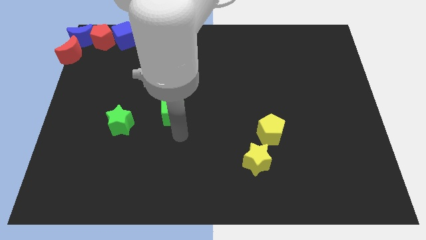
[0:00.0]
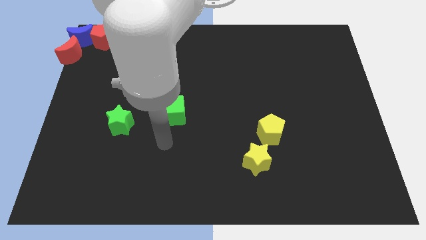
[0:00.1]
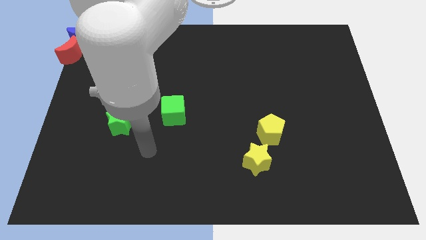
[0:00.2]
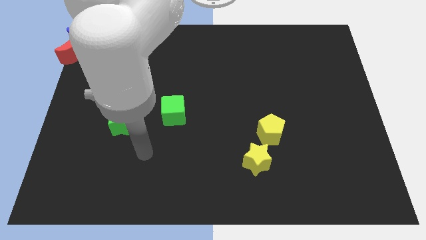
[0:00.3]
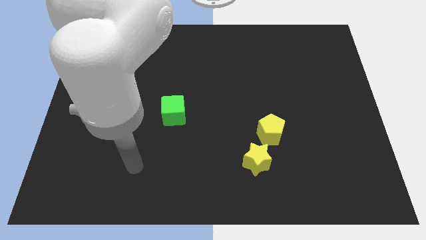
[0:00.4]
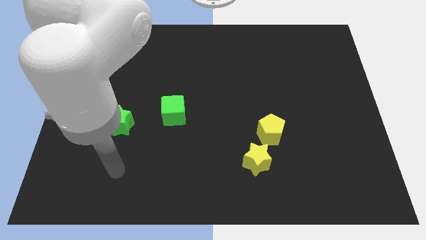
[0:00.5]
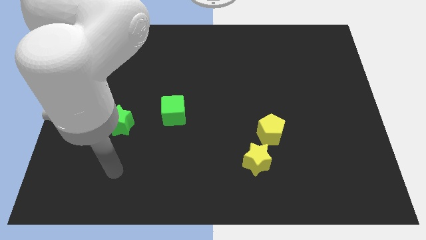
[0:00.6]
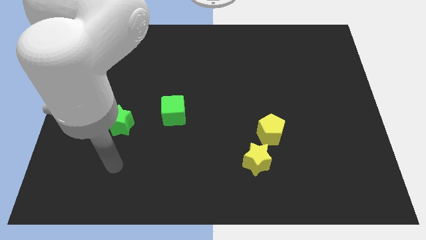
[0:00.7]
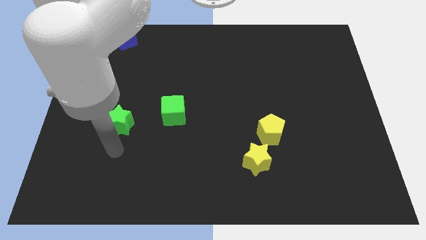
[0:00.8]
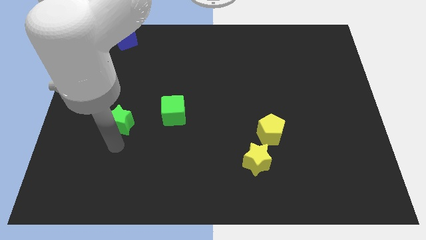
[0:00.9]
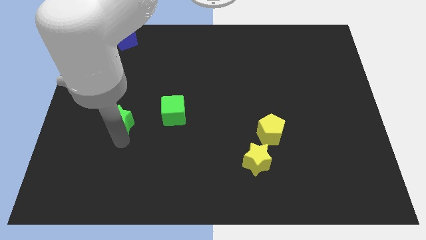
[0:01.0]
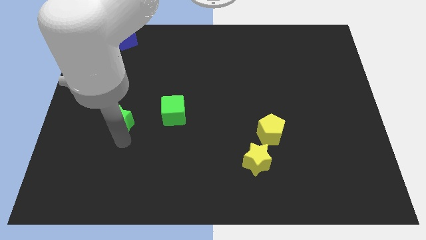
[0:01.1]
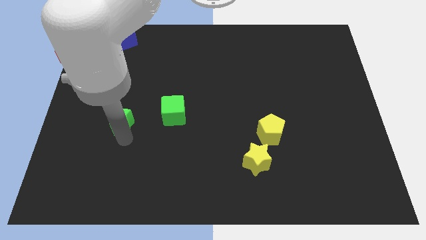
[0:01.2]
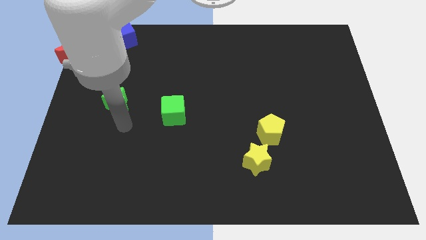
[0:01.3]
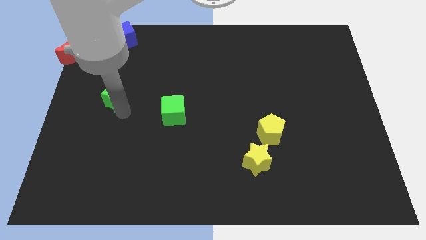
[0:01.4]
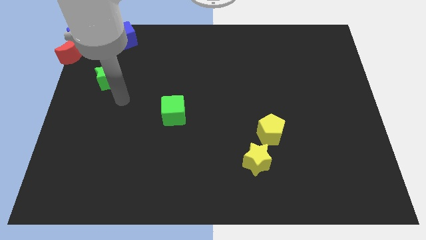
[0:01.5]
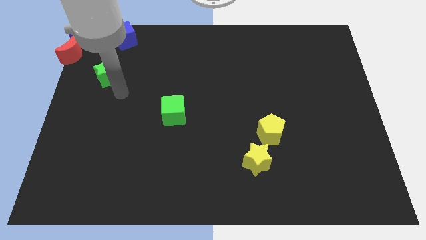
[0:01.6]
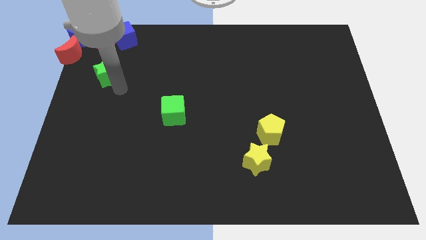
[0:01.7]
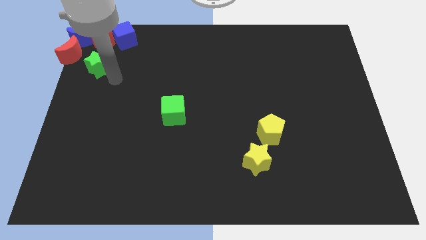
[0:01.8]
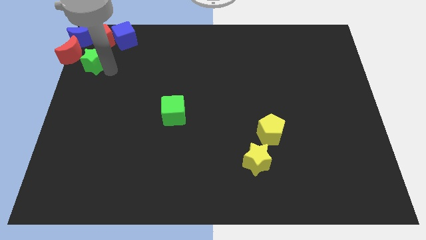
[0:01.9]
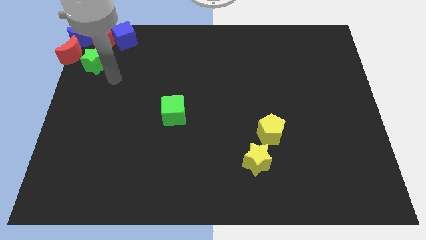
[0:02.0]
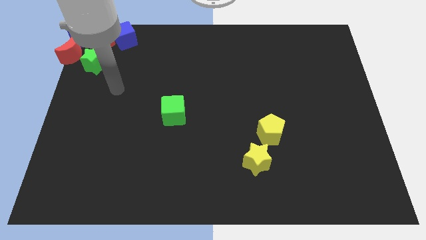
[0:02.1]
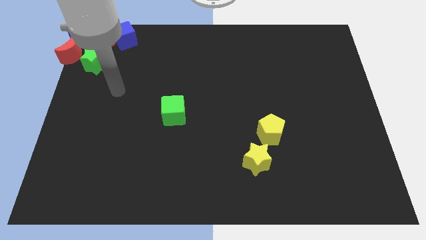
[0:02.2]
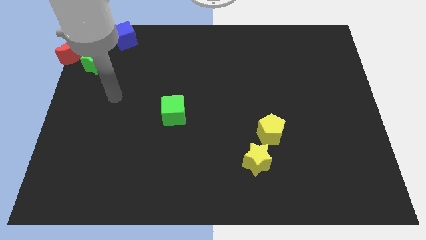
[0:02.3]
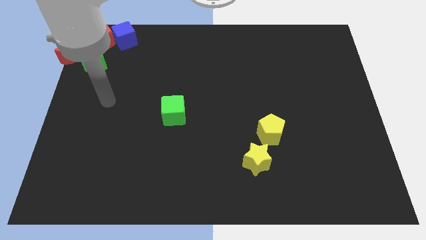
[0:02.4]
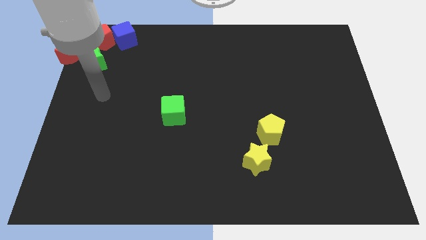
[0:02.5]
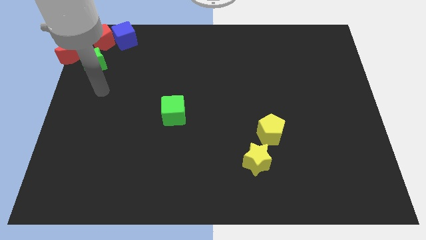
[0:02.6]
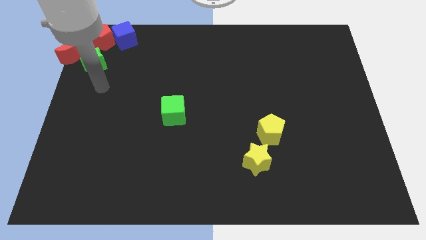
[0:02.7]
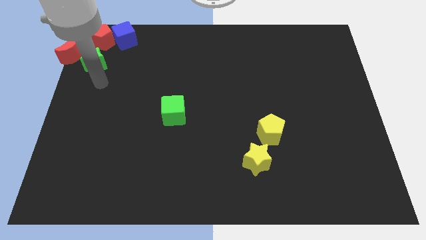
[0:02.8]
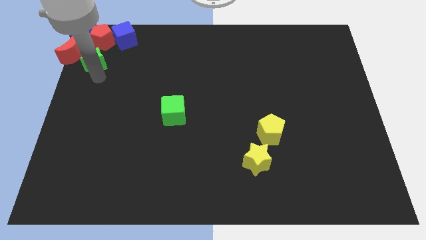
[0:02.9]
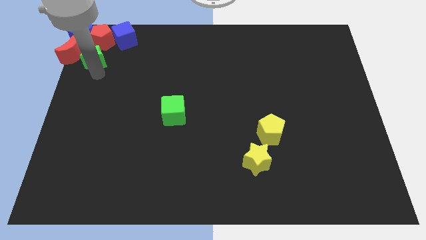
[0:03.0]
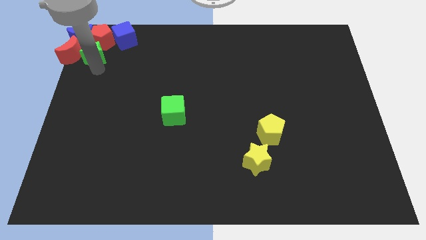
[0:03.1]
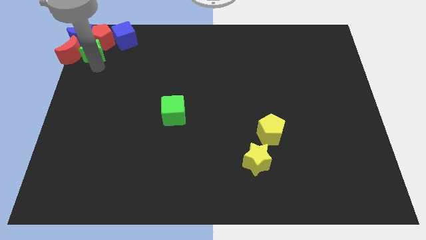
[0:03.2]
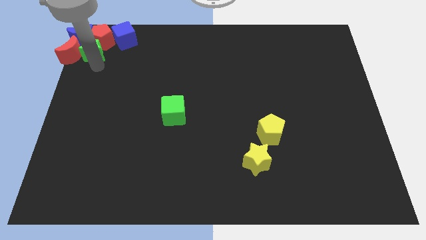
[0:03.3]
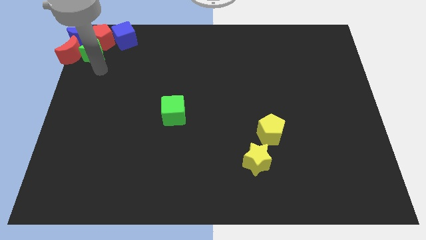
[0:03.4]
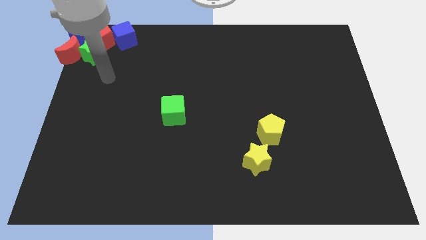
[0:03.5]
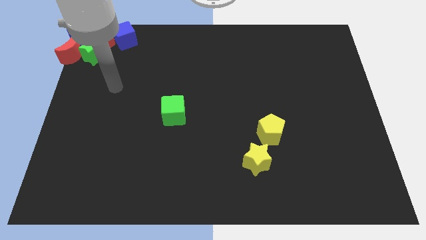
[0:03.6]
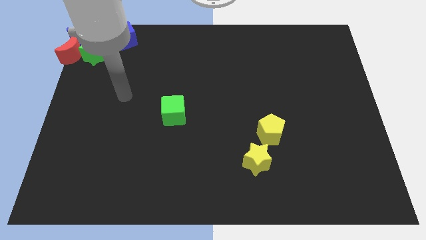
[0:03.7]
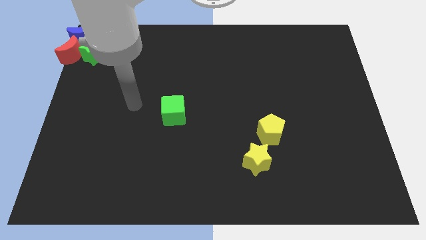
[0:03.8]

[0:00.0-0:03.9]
push the green star to the top left of the board

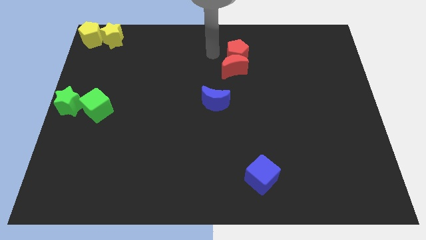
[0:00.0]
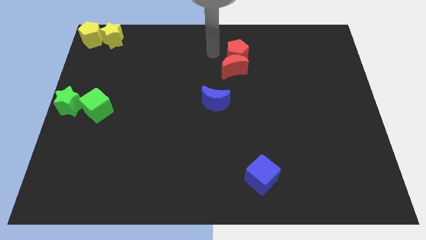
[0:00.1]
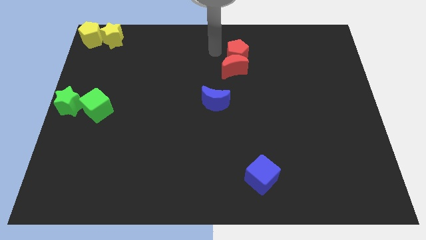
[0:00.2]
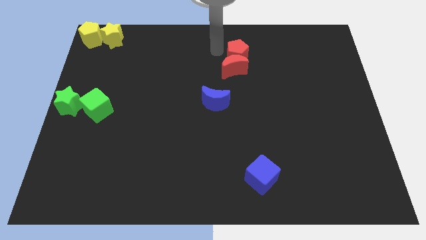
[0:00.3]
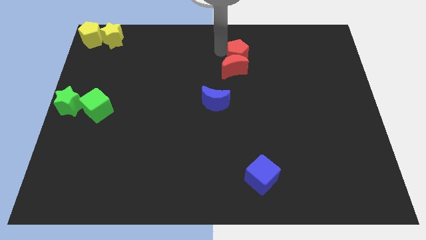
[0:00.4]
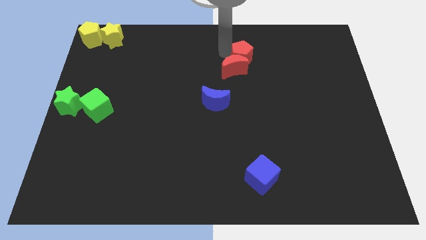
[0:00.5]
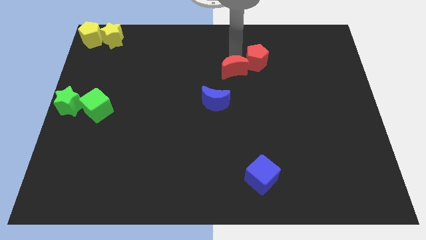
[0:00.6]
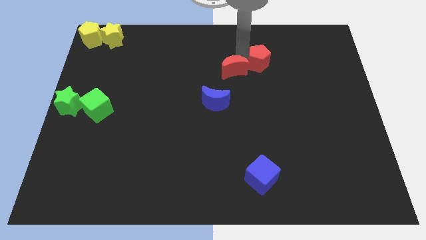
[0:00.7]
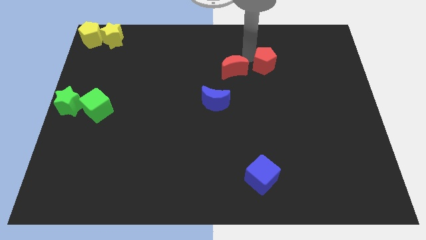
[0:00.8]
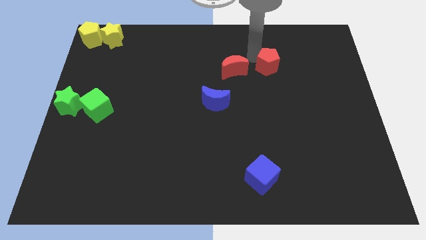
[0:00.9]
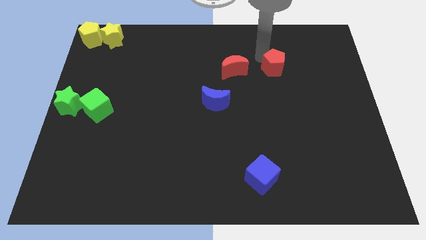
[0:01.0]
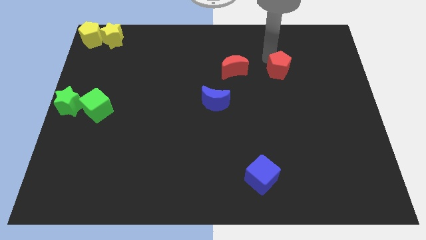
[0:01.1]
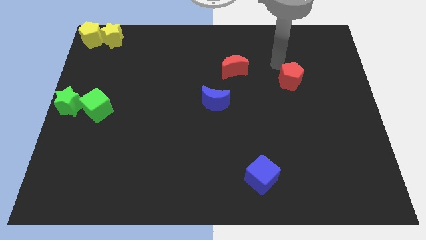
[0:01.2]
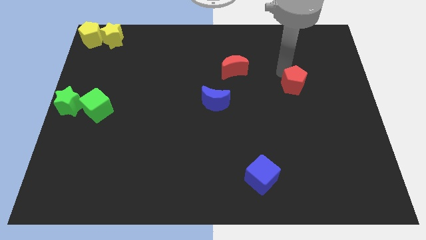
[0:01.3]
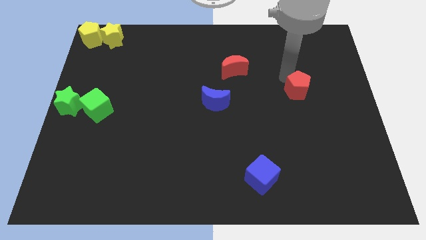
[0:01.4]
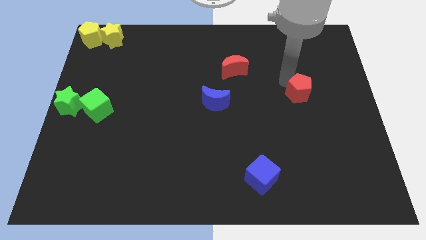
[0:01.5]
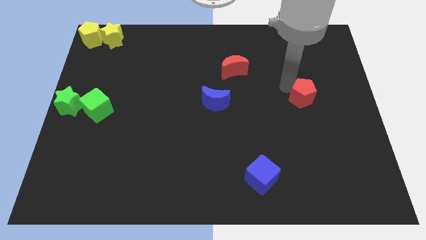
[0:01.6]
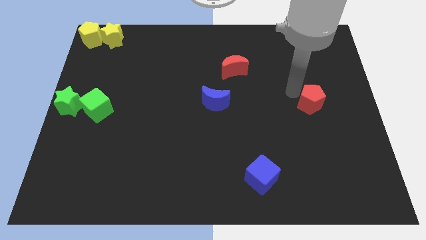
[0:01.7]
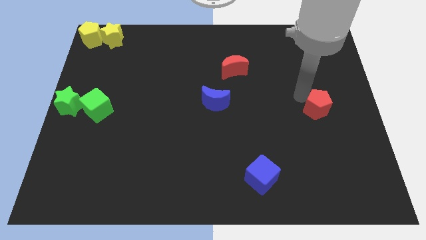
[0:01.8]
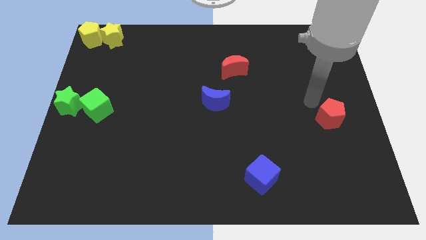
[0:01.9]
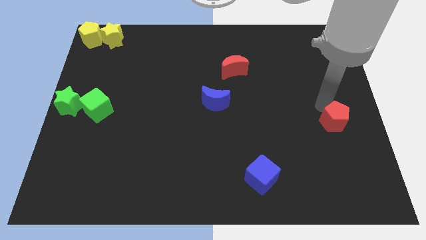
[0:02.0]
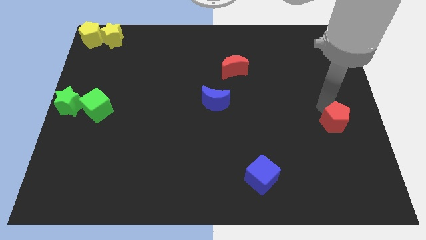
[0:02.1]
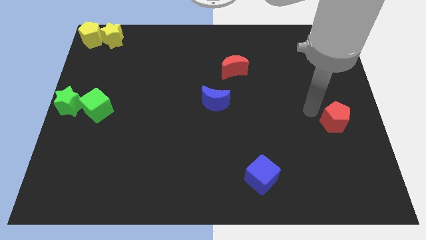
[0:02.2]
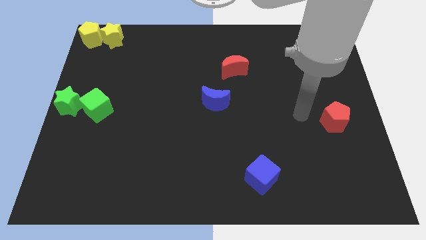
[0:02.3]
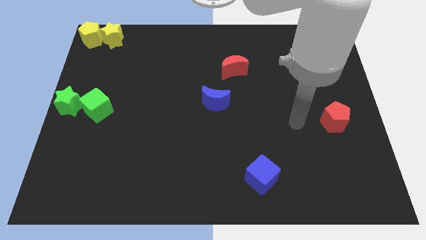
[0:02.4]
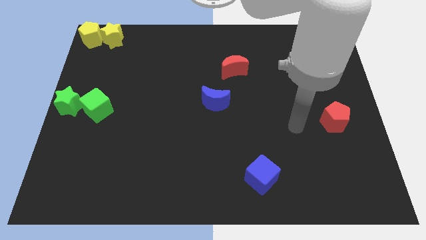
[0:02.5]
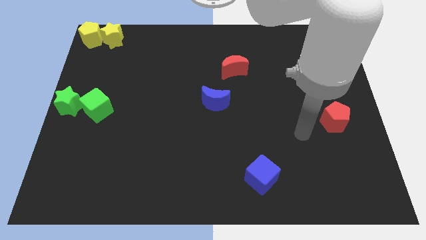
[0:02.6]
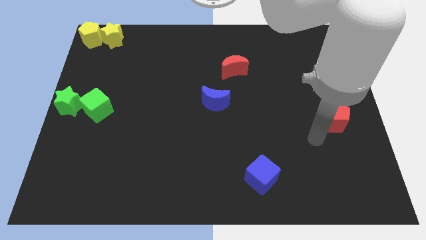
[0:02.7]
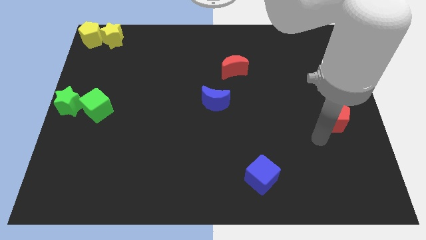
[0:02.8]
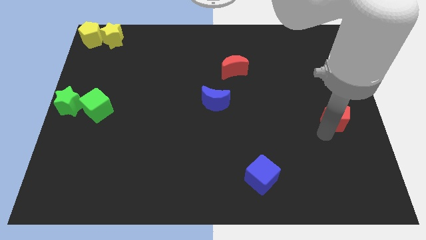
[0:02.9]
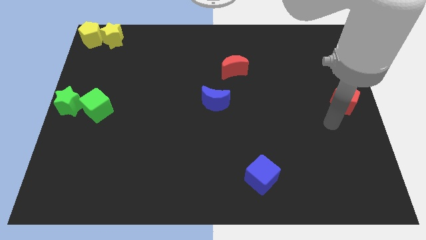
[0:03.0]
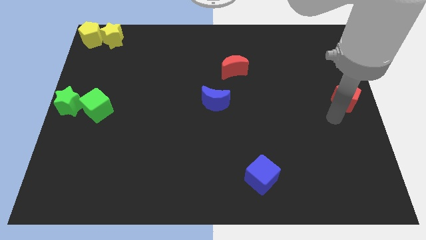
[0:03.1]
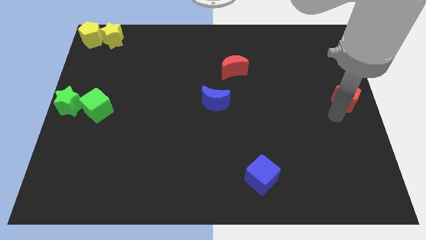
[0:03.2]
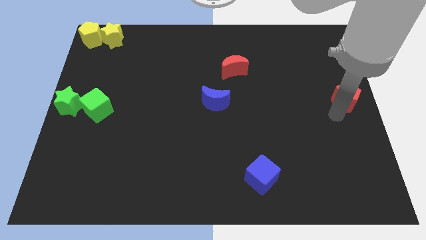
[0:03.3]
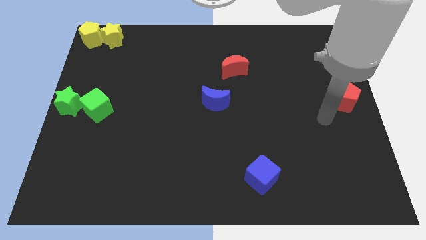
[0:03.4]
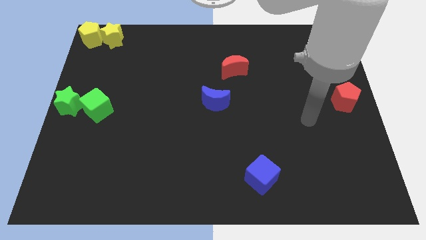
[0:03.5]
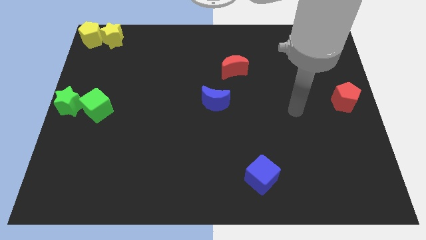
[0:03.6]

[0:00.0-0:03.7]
push the red pentagon to the center right

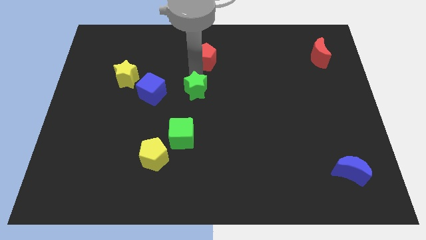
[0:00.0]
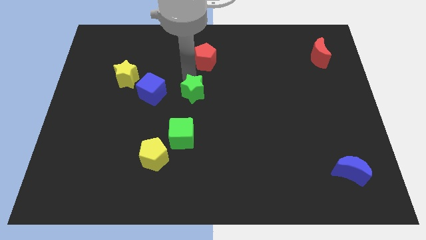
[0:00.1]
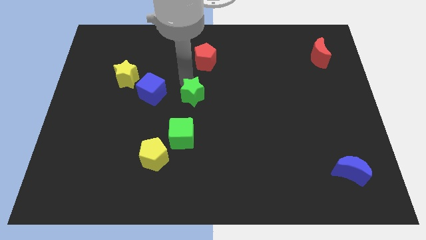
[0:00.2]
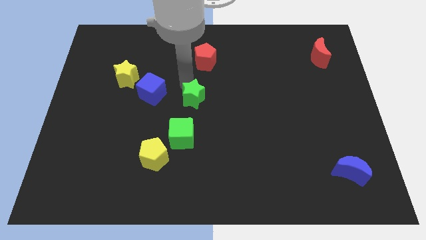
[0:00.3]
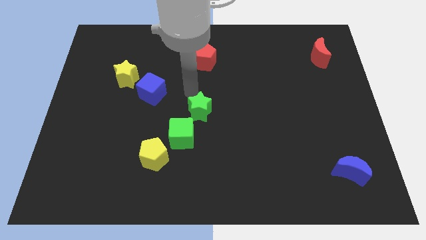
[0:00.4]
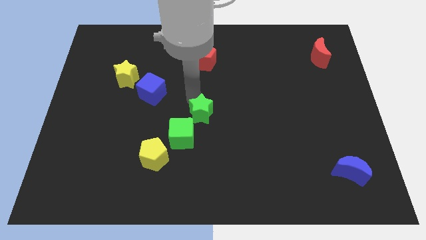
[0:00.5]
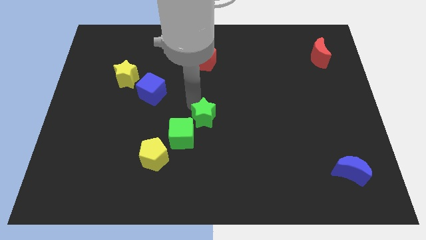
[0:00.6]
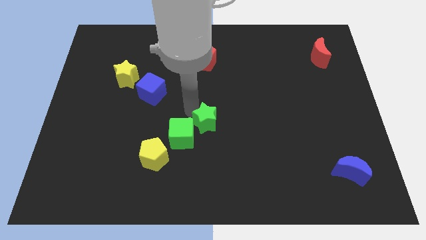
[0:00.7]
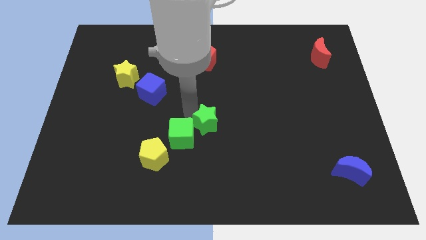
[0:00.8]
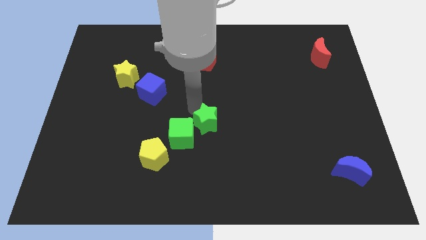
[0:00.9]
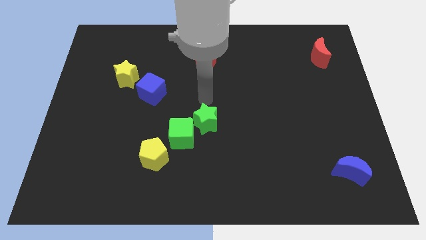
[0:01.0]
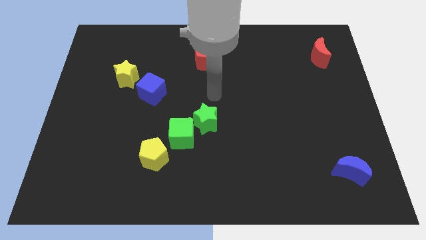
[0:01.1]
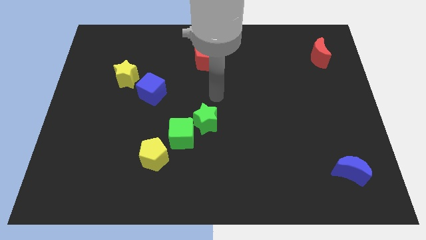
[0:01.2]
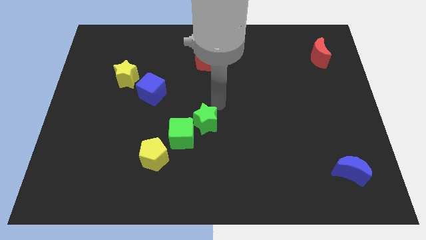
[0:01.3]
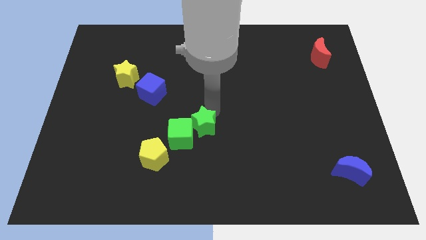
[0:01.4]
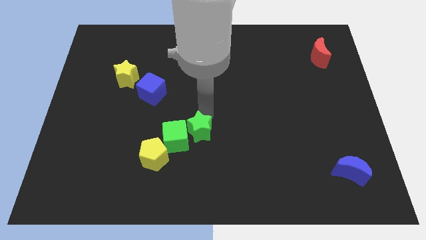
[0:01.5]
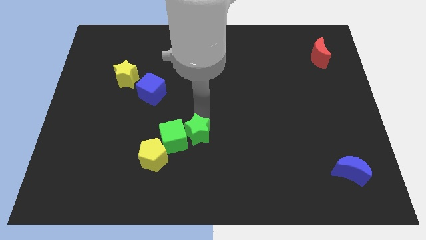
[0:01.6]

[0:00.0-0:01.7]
push the green star right to the green cube

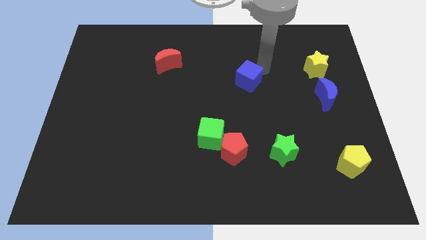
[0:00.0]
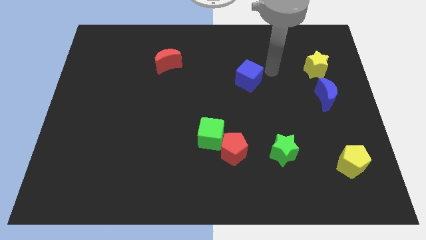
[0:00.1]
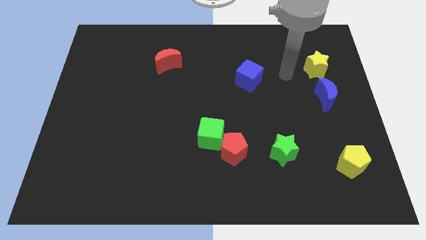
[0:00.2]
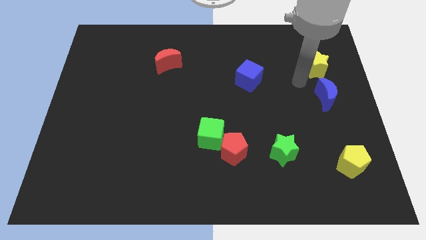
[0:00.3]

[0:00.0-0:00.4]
move the arm away from the blue cube
